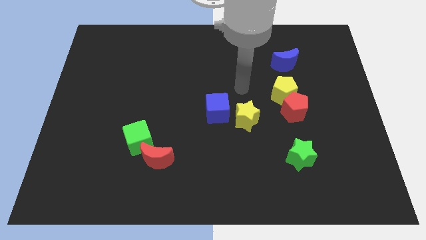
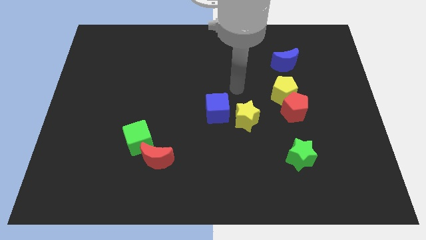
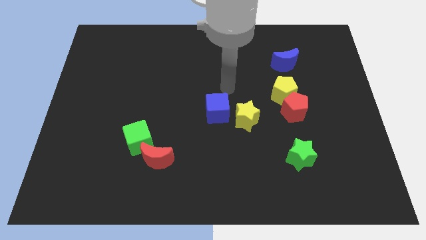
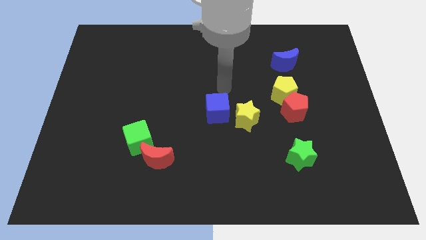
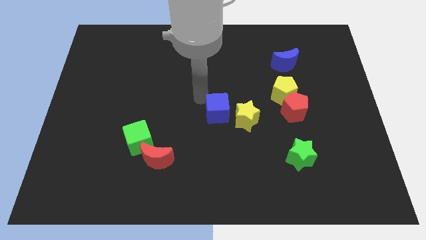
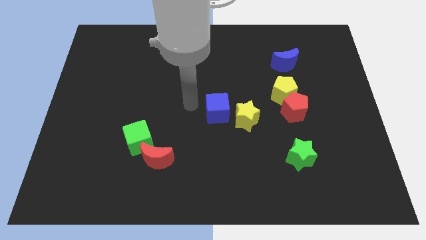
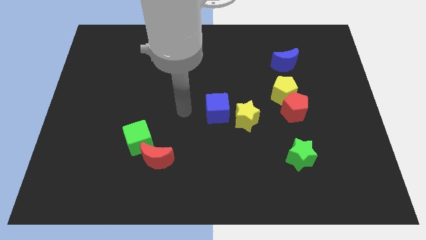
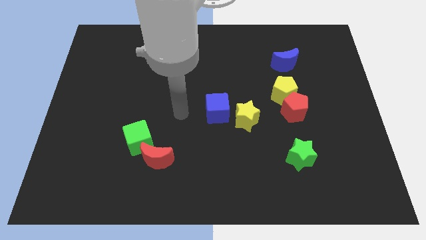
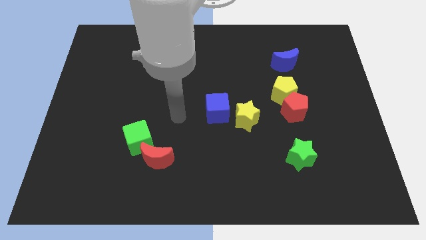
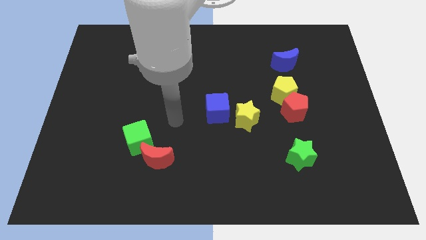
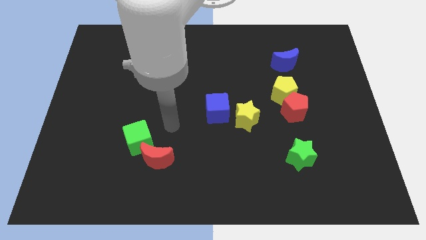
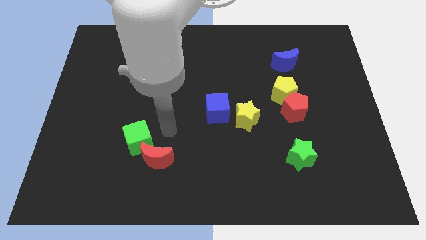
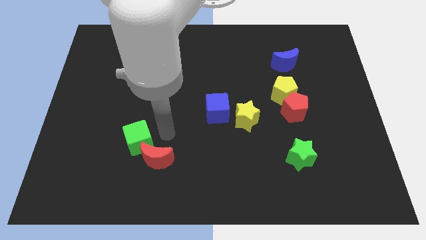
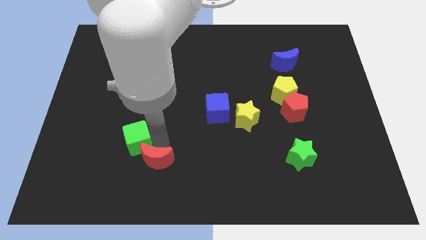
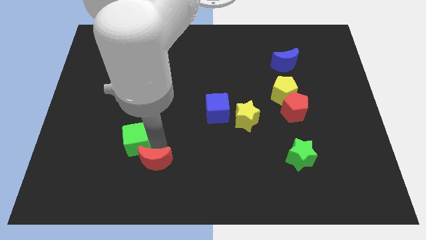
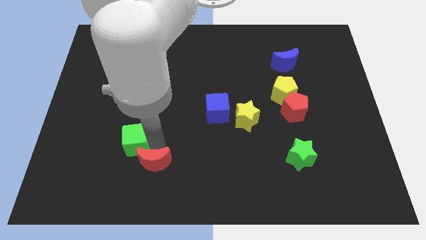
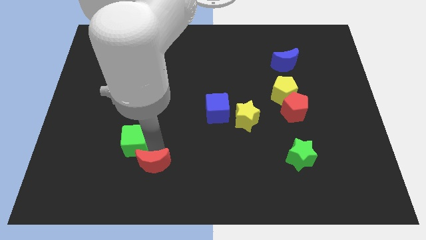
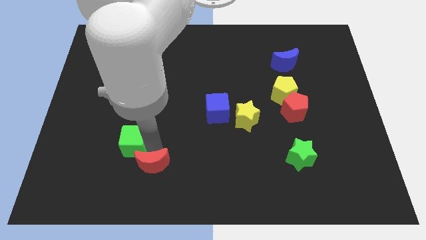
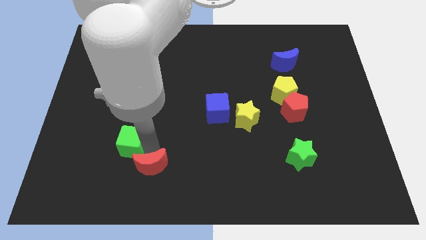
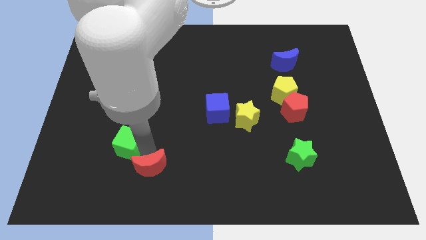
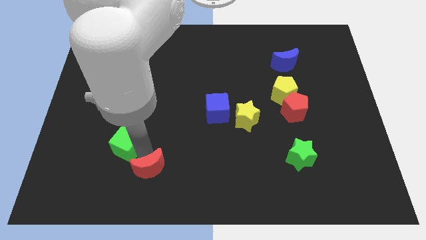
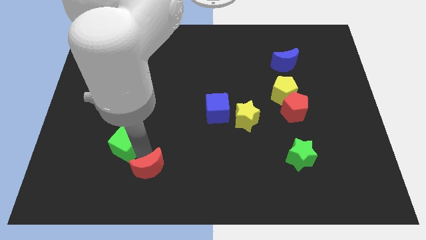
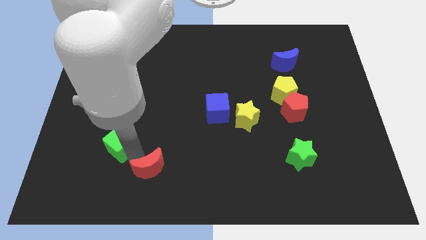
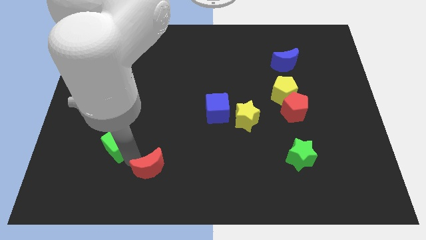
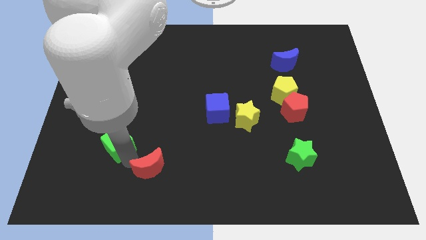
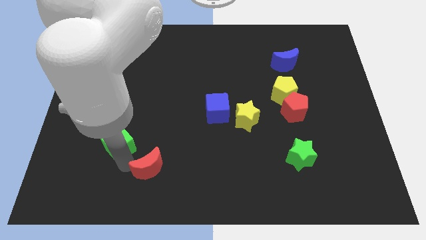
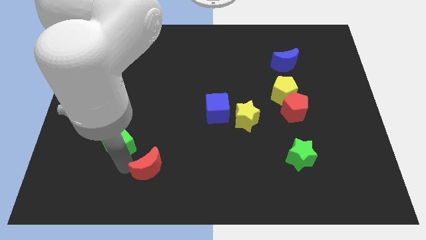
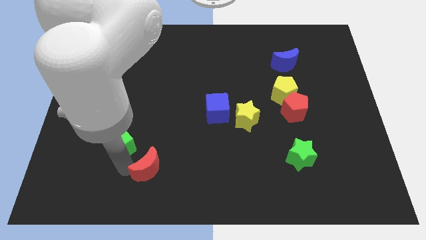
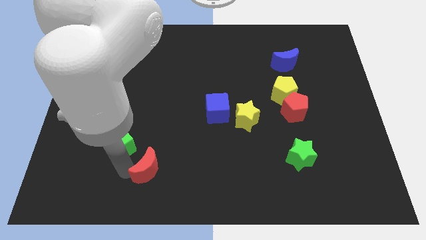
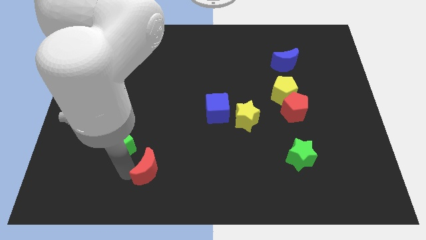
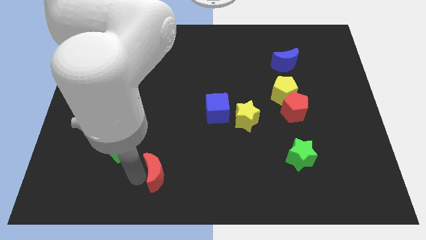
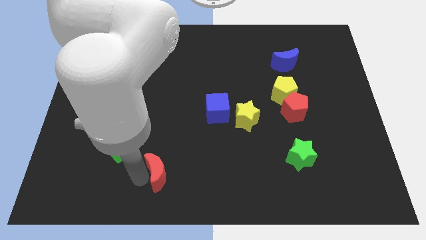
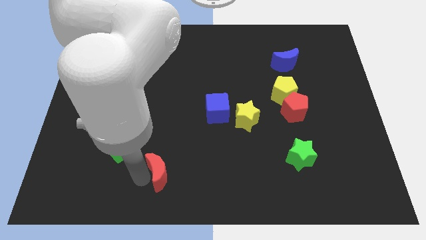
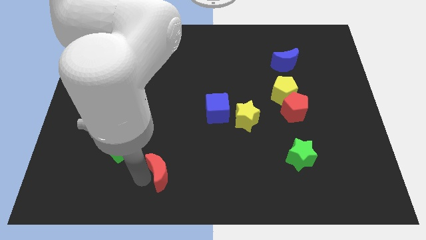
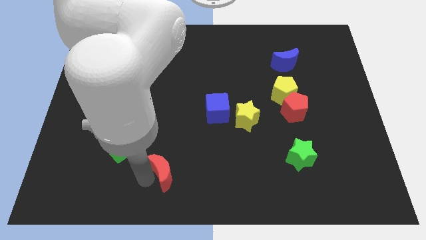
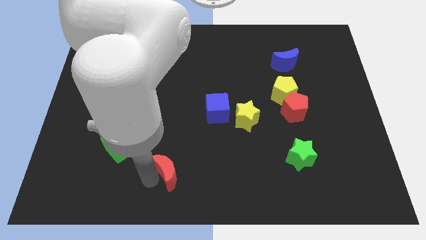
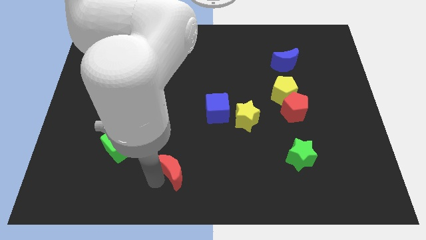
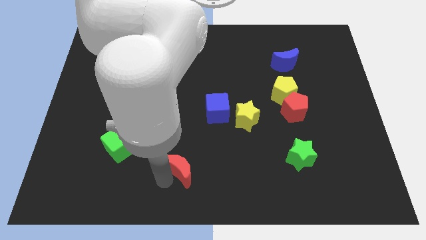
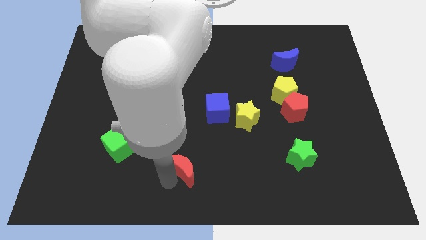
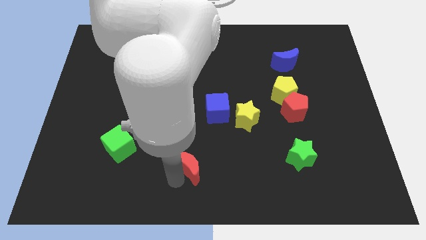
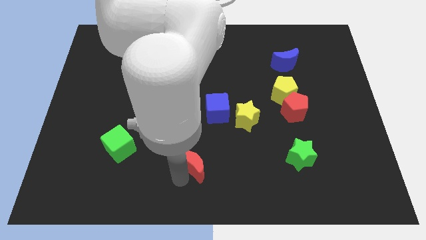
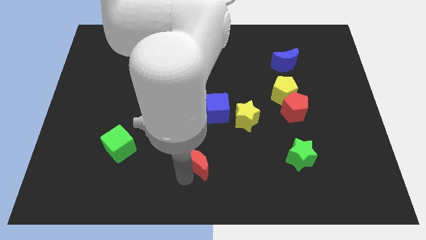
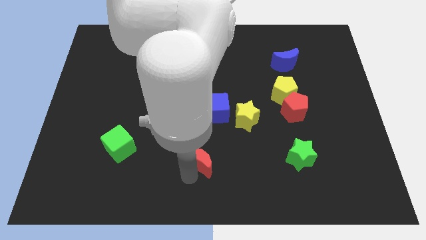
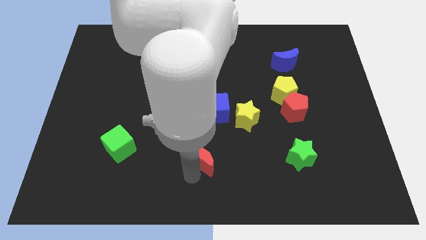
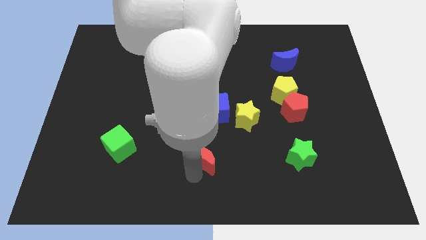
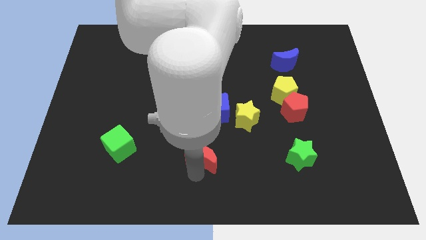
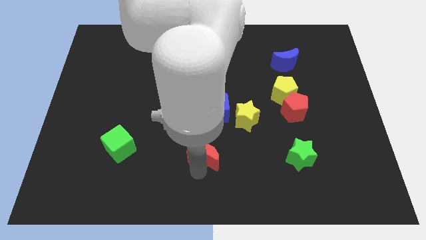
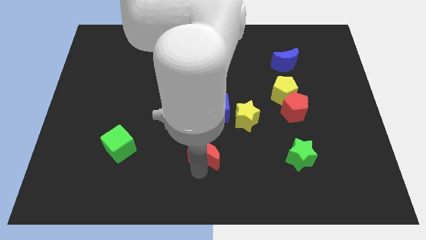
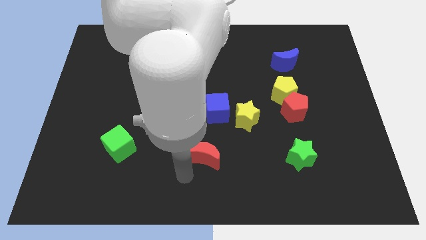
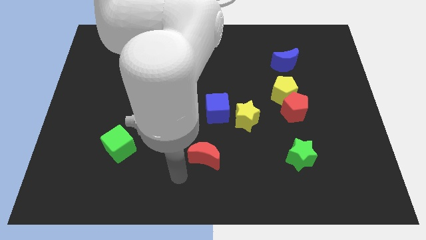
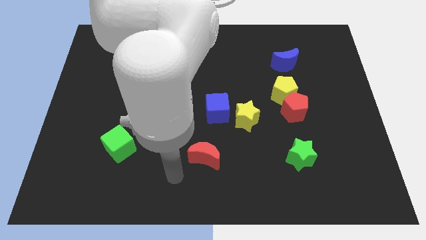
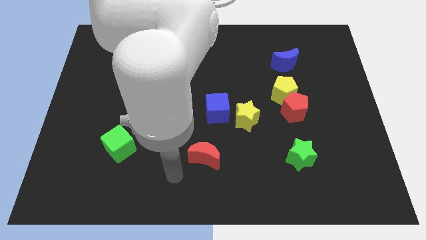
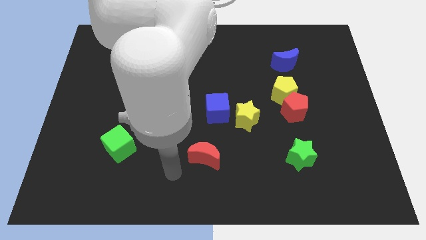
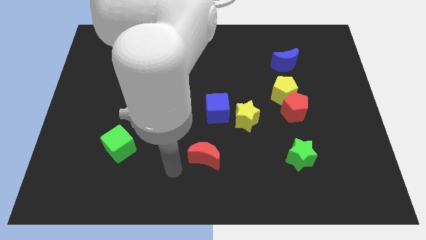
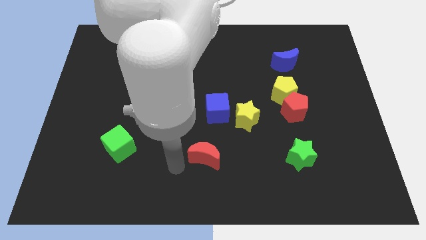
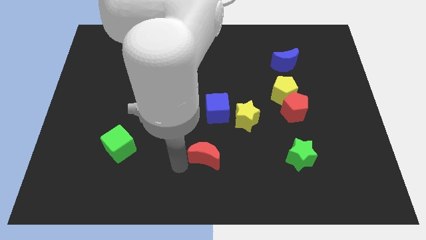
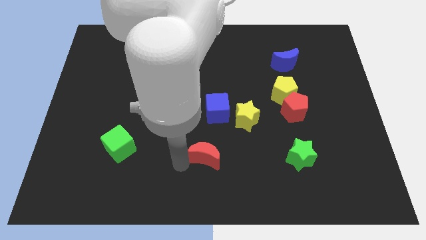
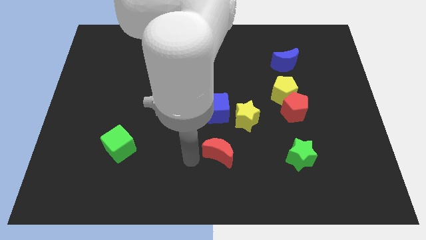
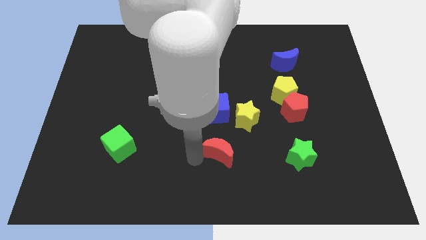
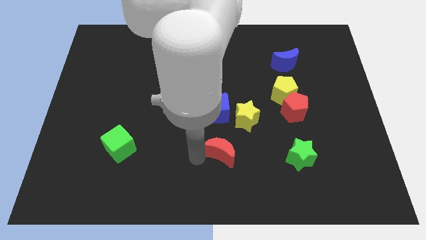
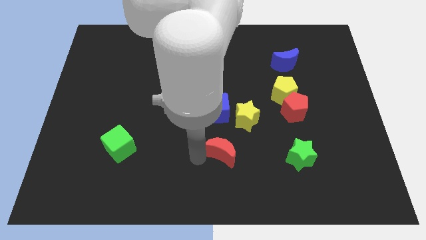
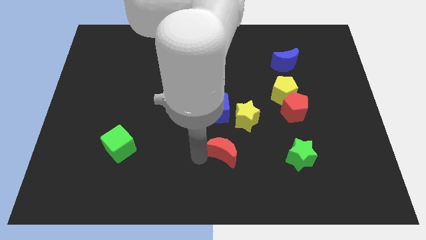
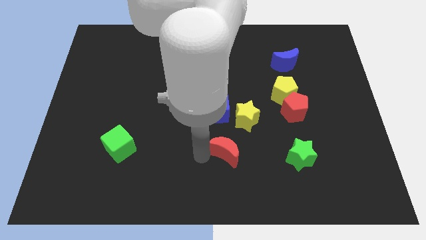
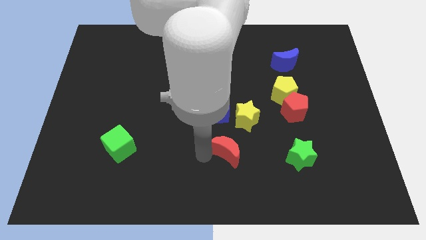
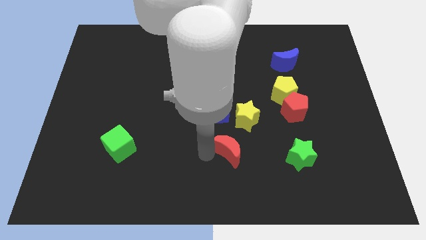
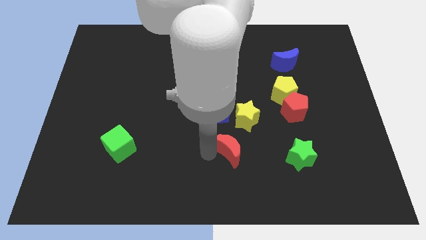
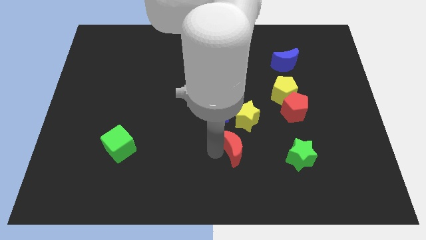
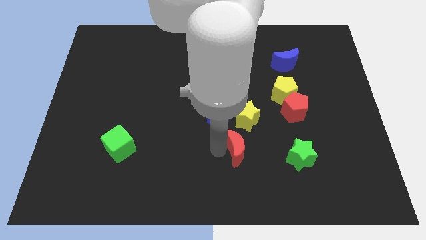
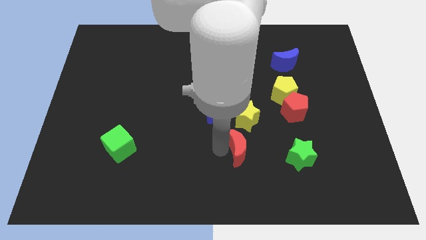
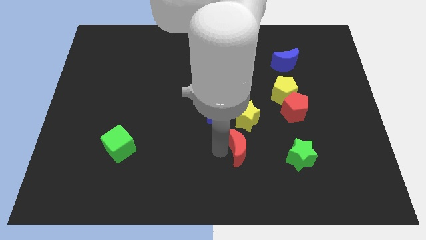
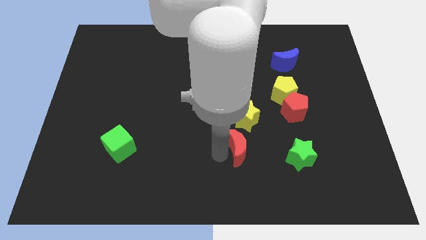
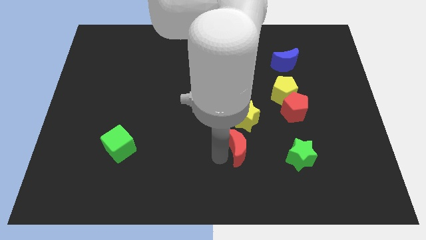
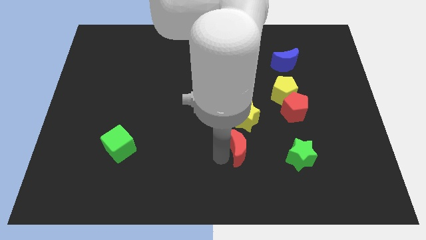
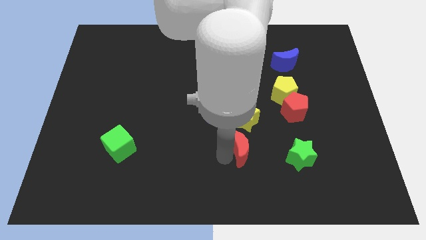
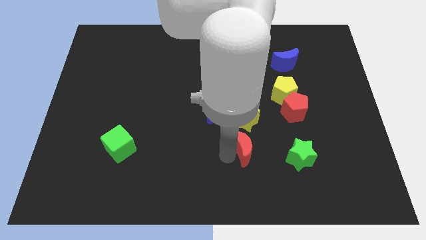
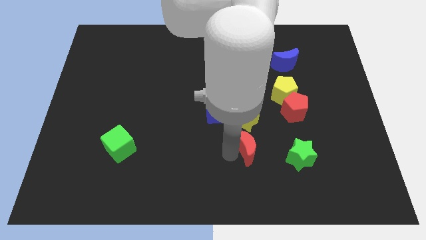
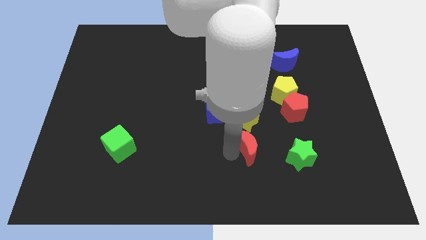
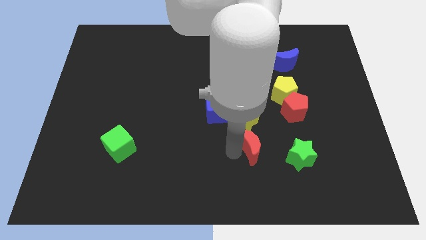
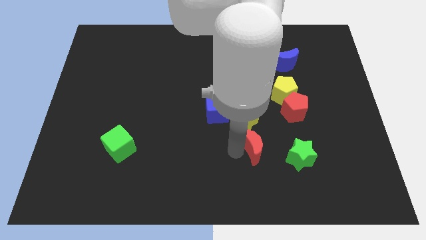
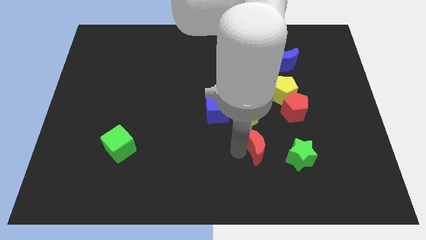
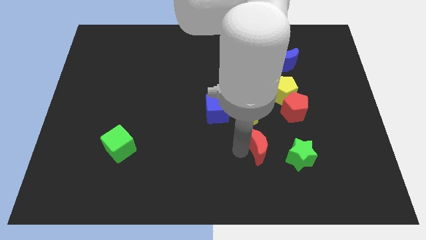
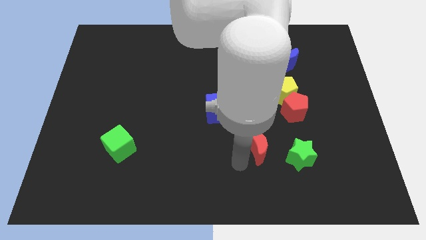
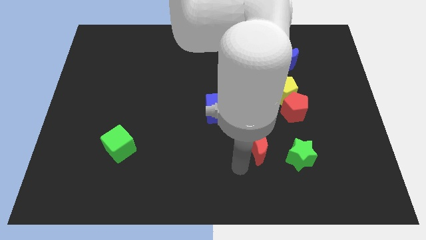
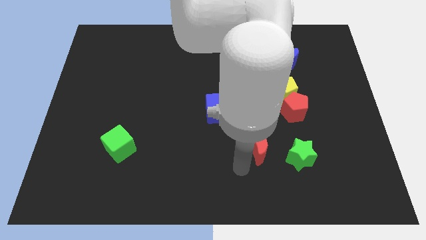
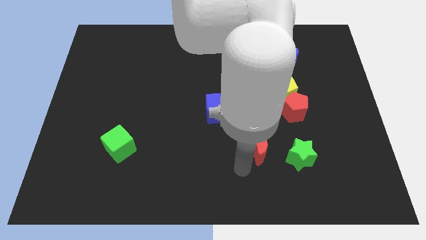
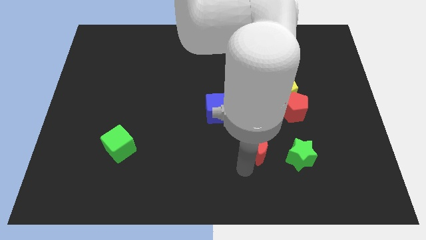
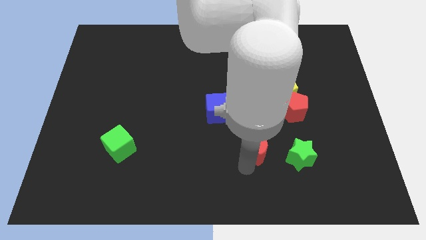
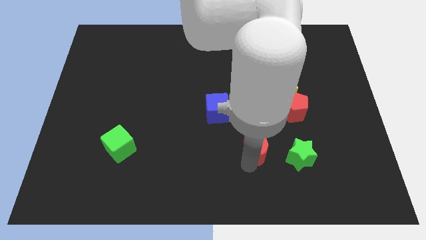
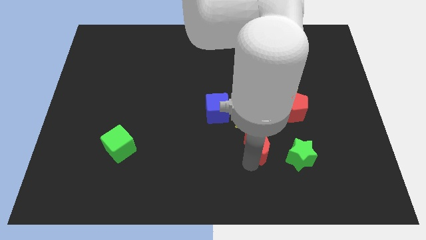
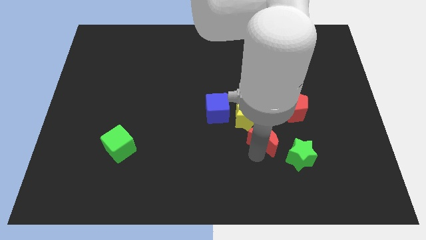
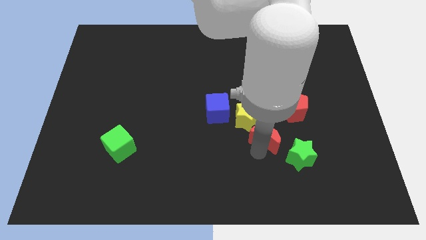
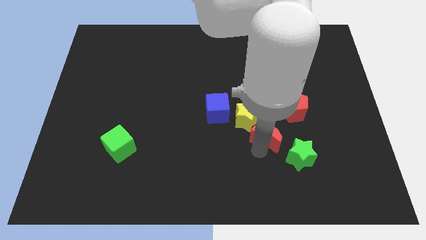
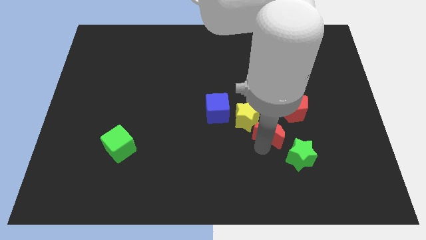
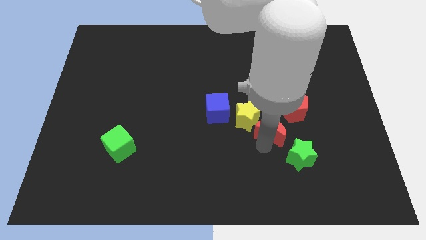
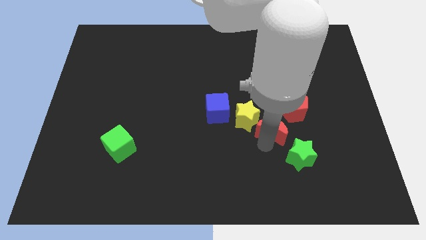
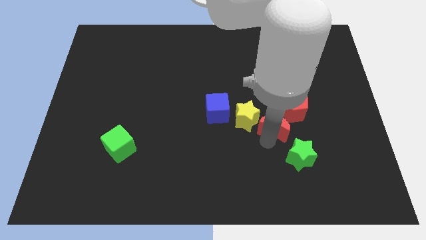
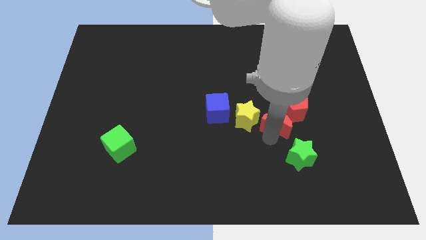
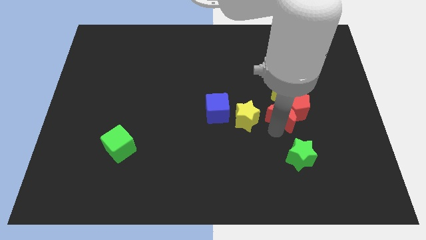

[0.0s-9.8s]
slide the red moon next to the red pentagon
